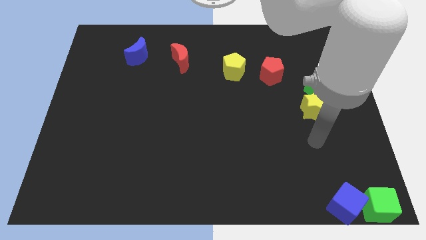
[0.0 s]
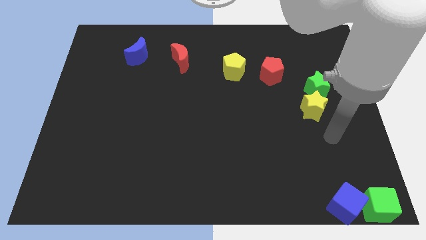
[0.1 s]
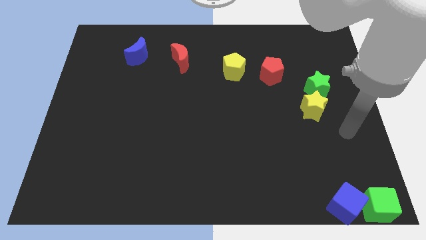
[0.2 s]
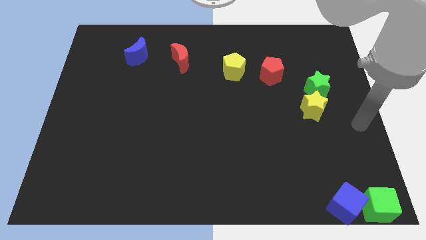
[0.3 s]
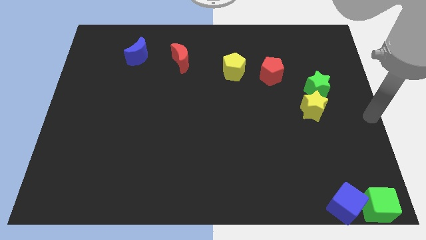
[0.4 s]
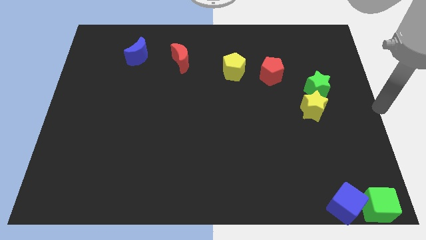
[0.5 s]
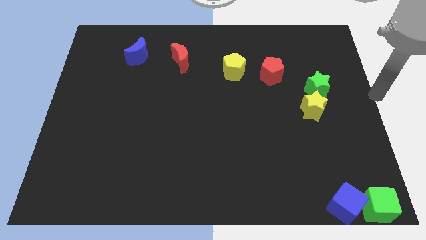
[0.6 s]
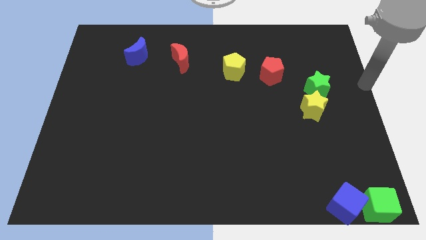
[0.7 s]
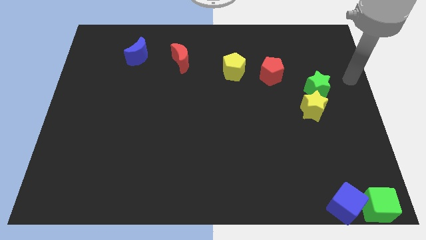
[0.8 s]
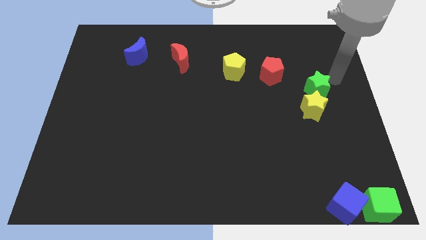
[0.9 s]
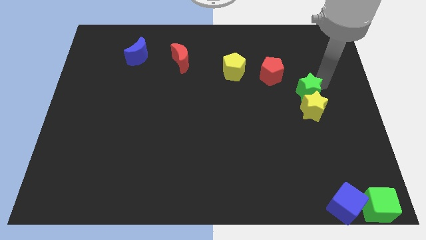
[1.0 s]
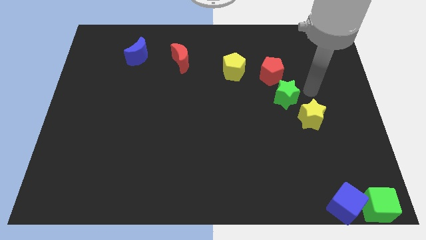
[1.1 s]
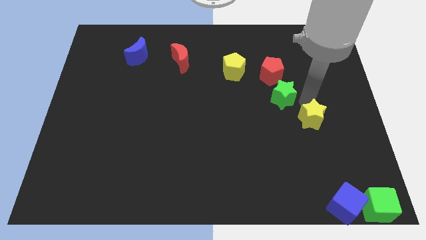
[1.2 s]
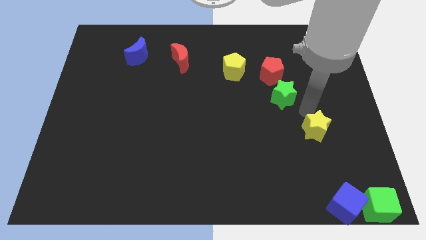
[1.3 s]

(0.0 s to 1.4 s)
separate yellow and the green star

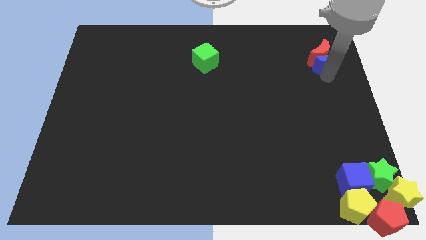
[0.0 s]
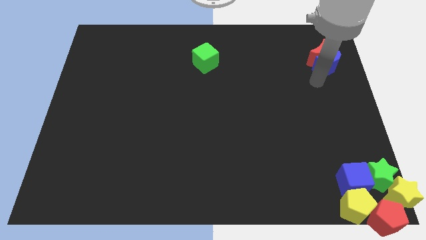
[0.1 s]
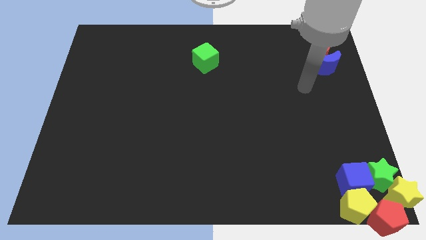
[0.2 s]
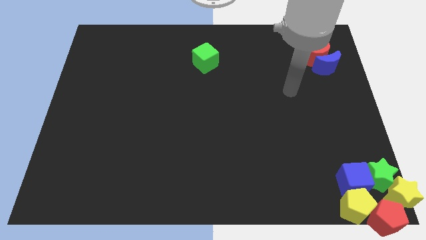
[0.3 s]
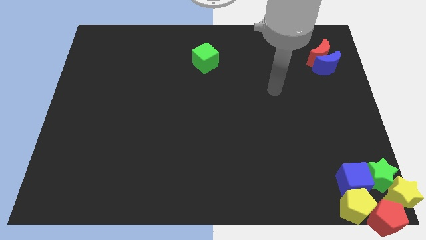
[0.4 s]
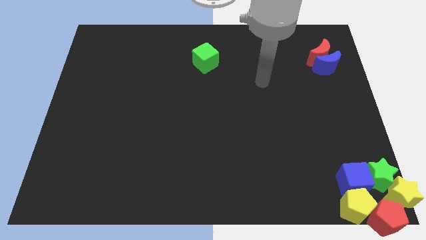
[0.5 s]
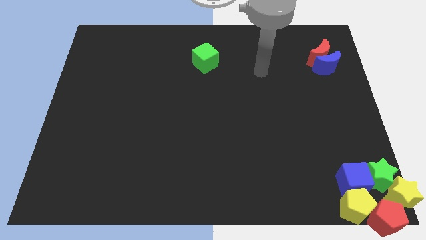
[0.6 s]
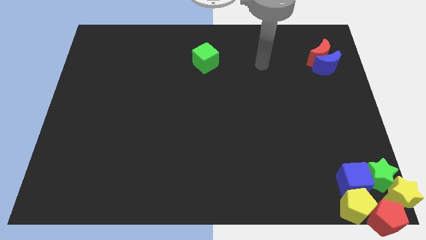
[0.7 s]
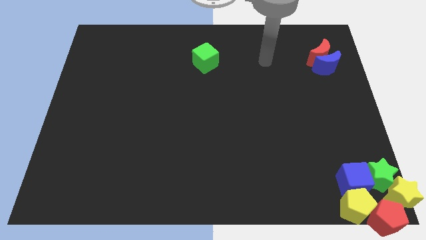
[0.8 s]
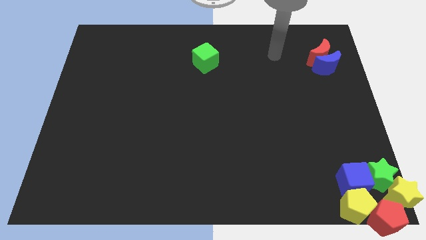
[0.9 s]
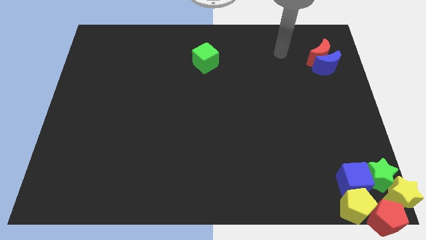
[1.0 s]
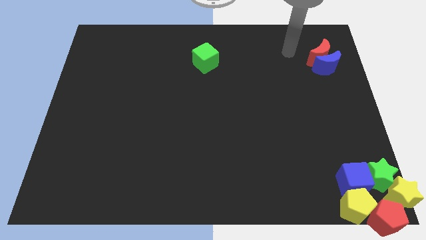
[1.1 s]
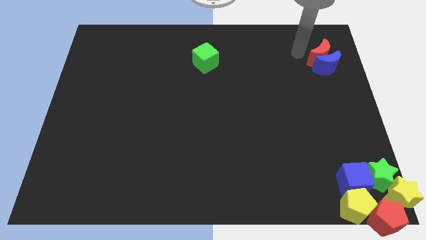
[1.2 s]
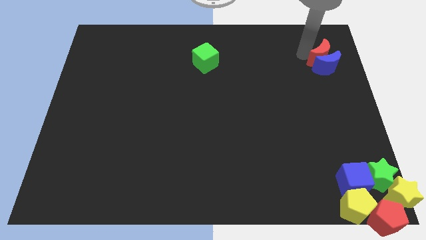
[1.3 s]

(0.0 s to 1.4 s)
point your arm at the top left side of red moon

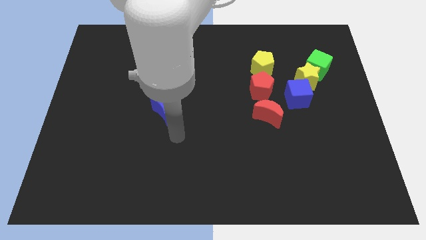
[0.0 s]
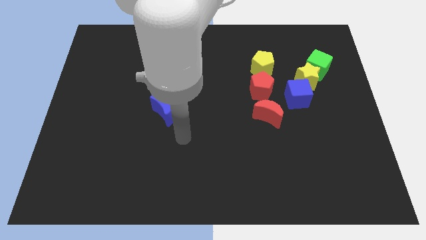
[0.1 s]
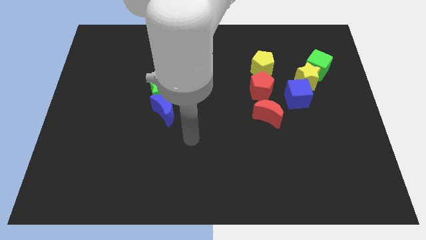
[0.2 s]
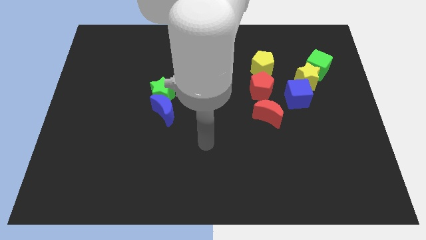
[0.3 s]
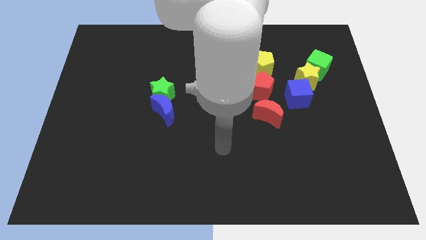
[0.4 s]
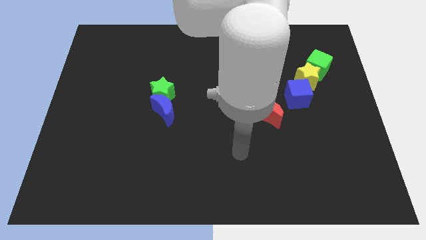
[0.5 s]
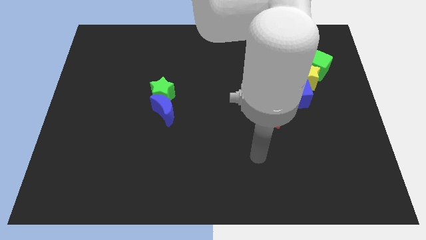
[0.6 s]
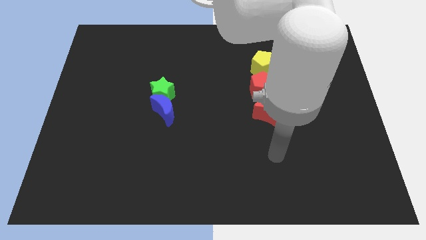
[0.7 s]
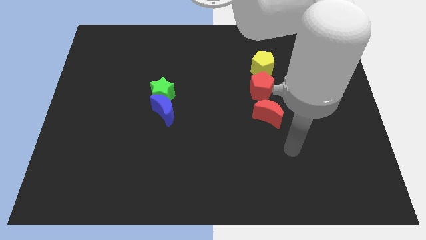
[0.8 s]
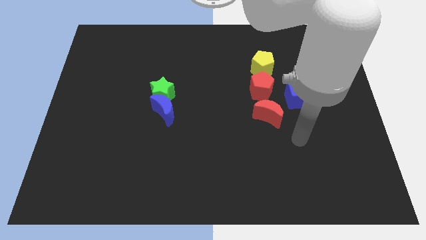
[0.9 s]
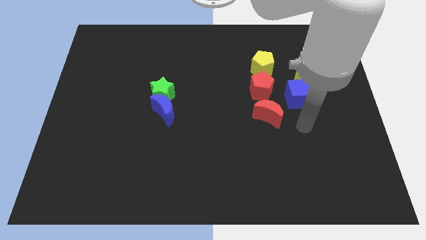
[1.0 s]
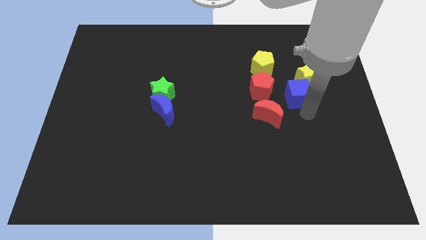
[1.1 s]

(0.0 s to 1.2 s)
move the arm away from the blue moon

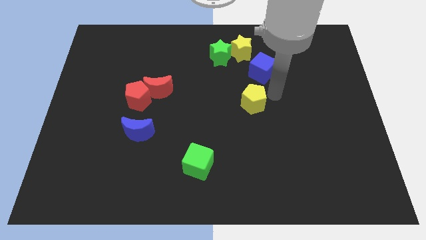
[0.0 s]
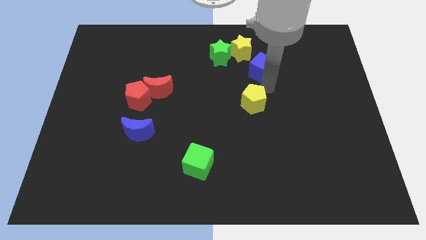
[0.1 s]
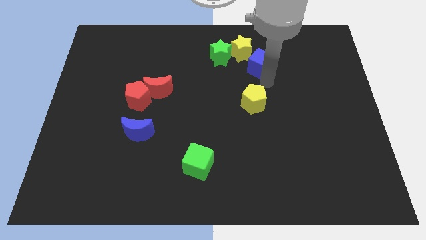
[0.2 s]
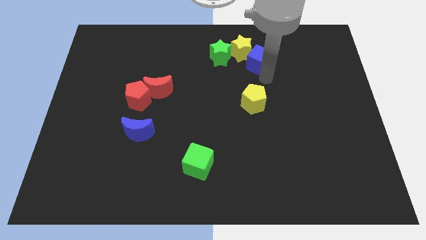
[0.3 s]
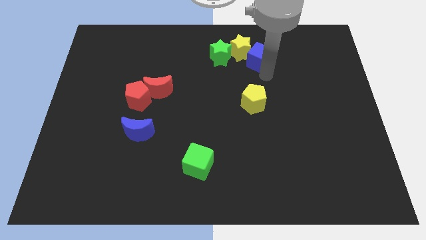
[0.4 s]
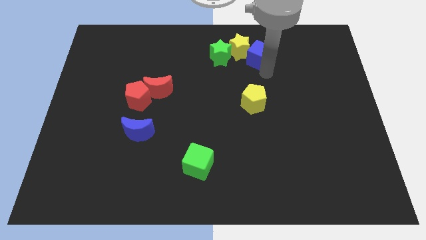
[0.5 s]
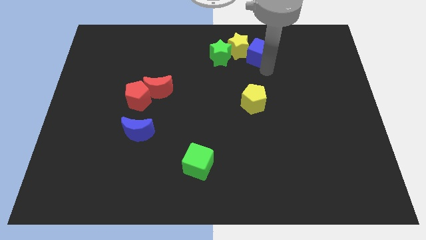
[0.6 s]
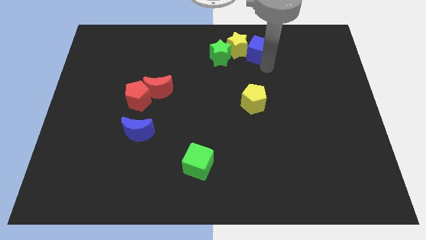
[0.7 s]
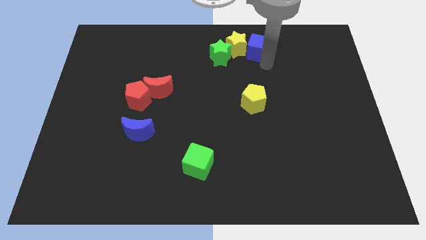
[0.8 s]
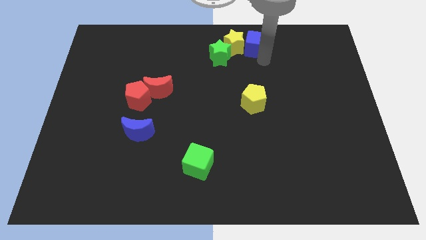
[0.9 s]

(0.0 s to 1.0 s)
place blue cube on right of yellow star

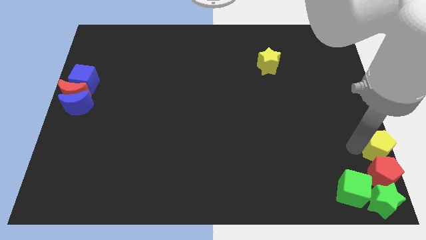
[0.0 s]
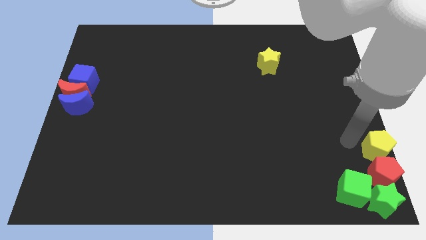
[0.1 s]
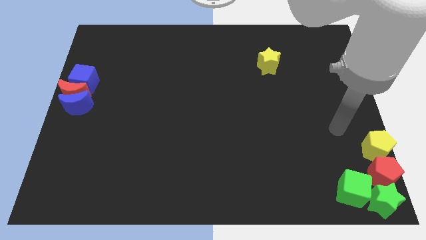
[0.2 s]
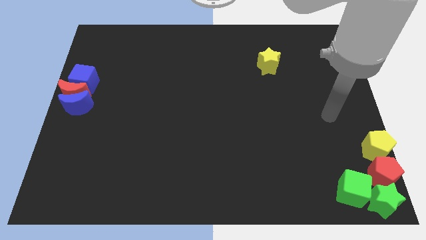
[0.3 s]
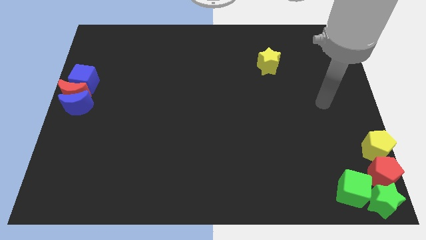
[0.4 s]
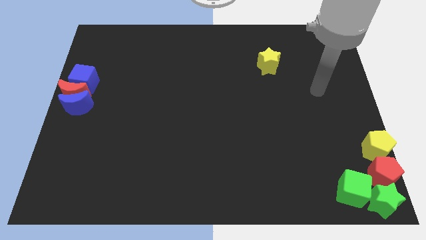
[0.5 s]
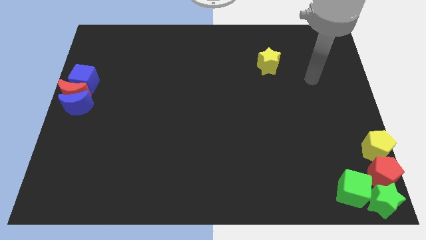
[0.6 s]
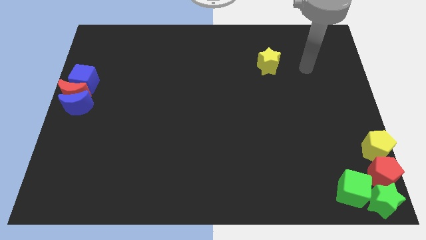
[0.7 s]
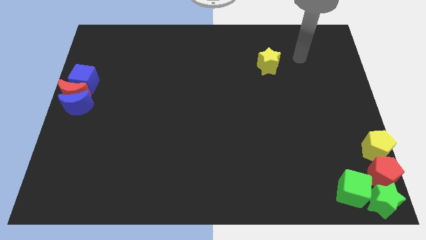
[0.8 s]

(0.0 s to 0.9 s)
move the arm right to yellow star

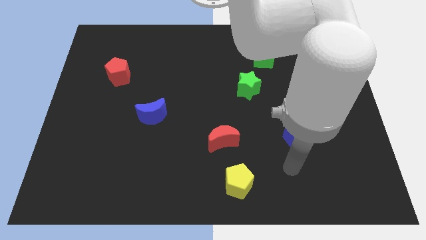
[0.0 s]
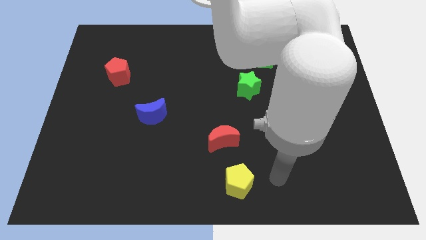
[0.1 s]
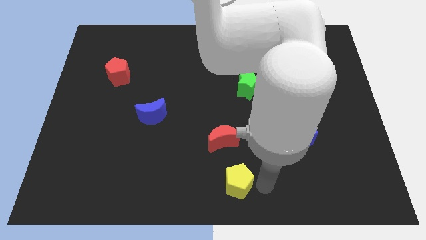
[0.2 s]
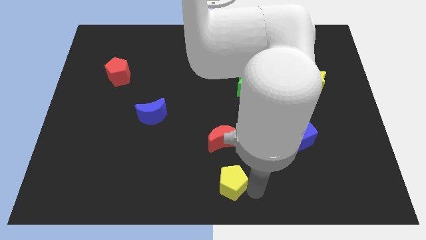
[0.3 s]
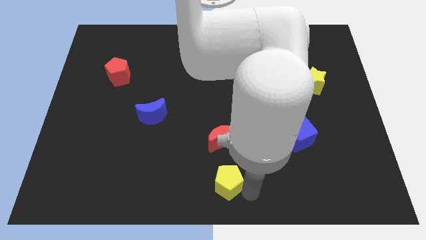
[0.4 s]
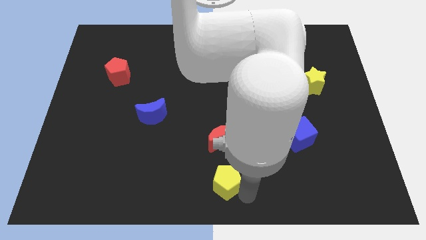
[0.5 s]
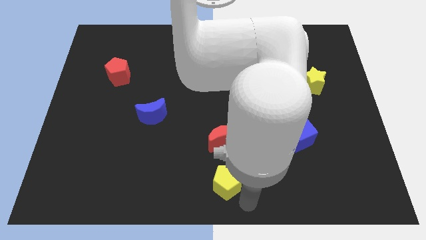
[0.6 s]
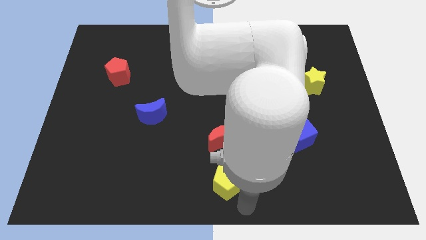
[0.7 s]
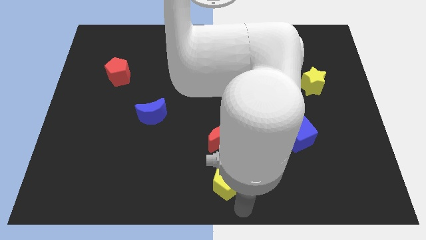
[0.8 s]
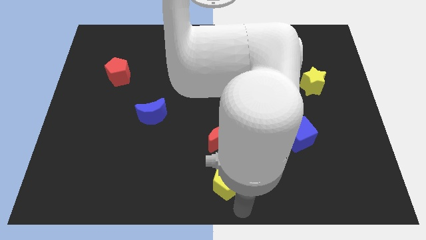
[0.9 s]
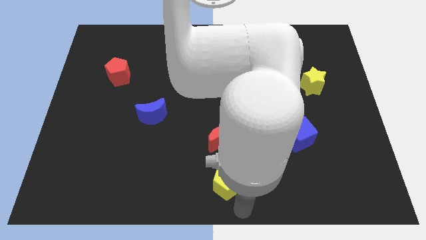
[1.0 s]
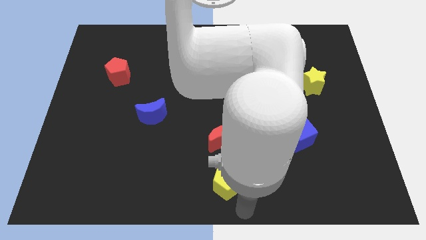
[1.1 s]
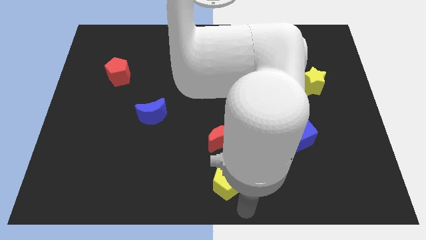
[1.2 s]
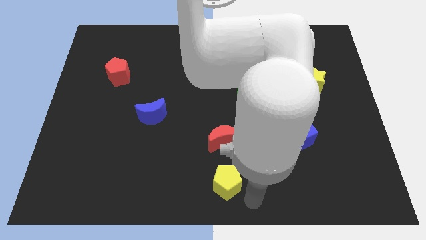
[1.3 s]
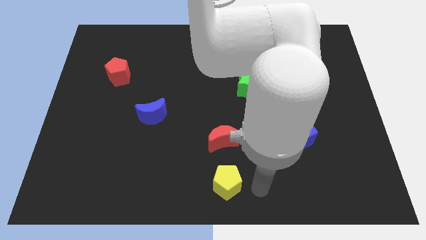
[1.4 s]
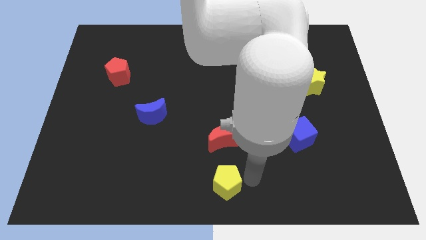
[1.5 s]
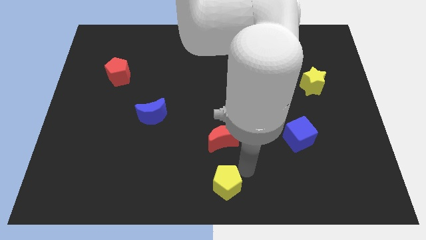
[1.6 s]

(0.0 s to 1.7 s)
place the yellow pentagon below the red moon

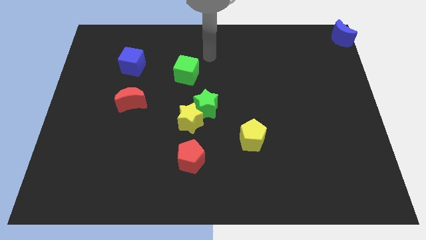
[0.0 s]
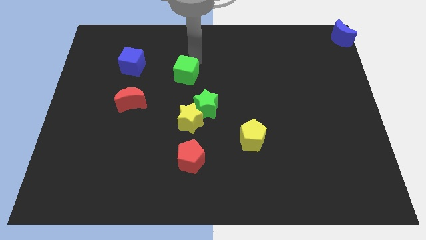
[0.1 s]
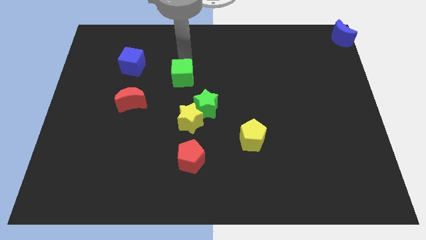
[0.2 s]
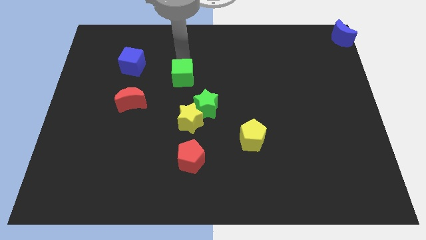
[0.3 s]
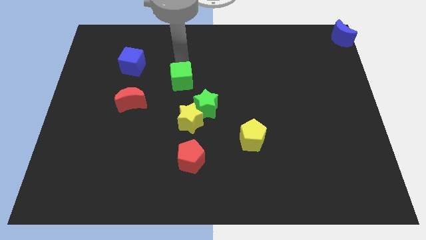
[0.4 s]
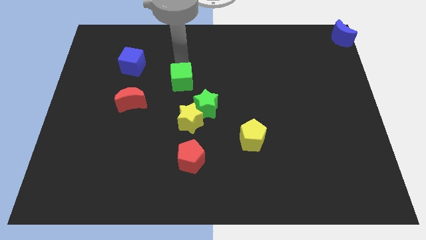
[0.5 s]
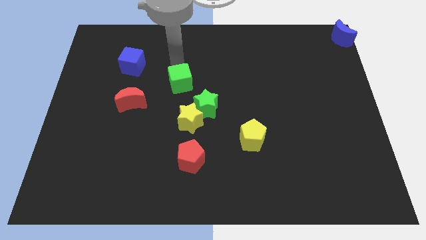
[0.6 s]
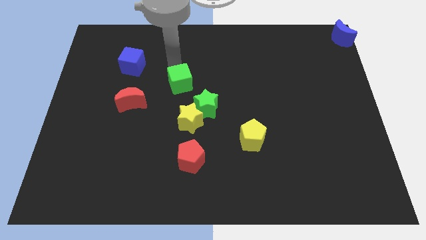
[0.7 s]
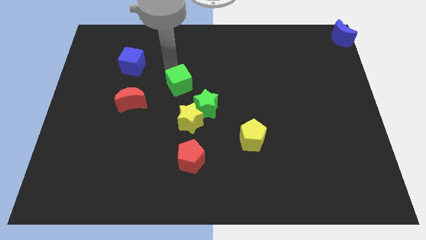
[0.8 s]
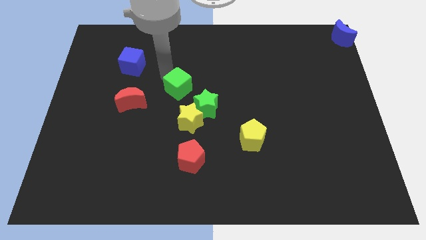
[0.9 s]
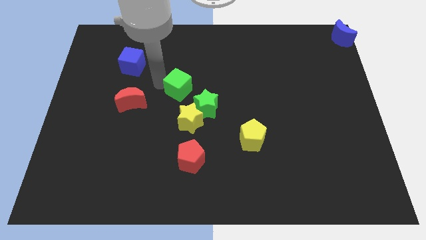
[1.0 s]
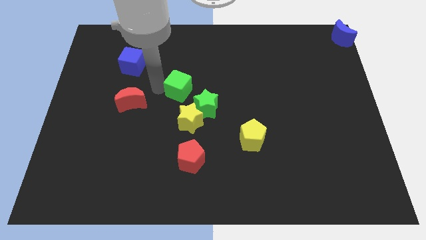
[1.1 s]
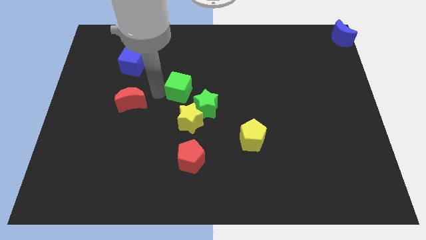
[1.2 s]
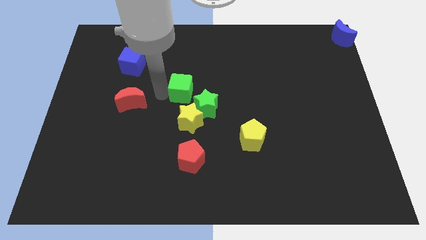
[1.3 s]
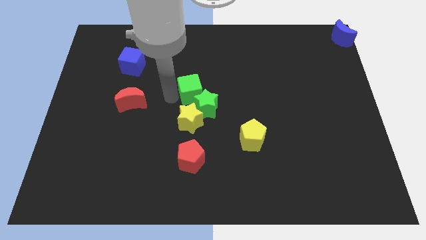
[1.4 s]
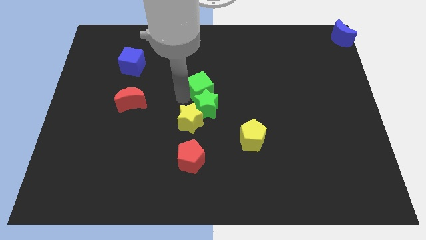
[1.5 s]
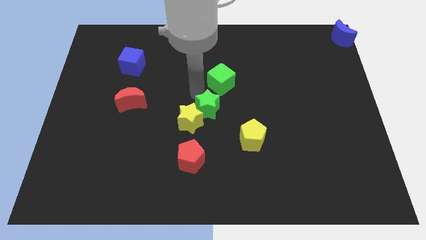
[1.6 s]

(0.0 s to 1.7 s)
place the green cube above the green star
